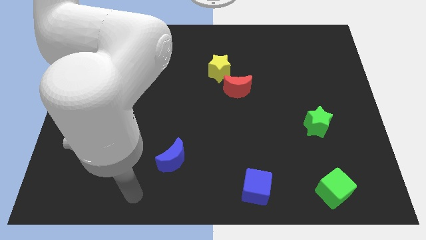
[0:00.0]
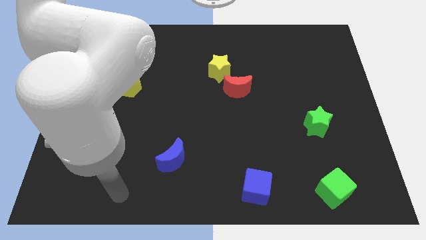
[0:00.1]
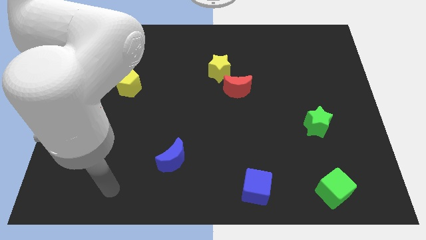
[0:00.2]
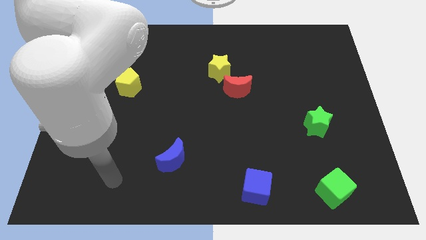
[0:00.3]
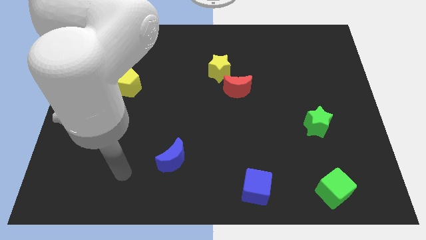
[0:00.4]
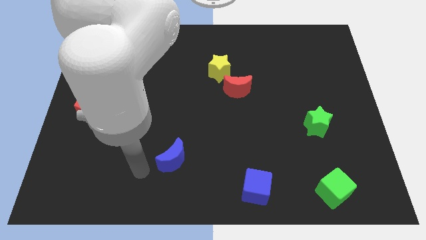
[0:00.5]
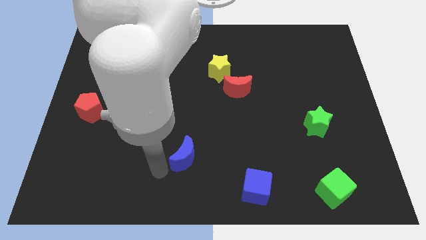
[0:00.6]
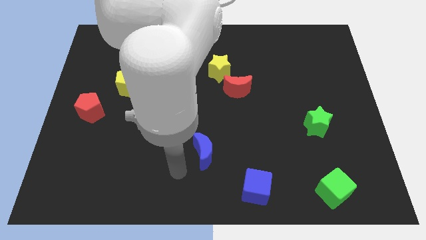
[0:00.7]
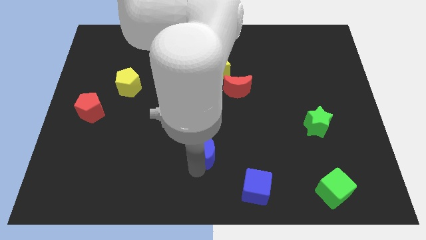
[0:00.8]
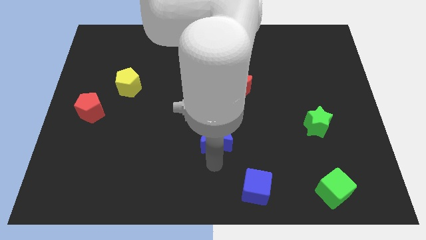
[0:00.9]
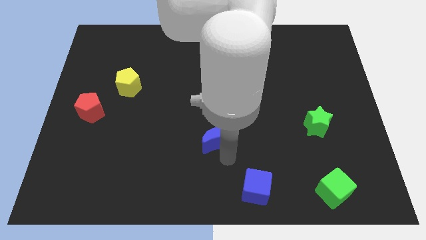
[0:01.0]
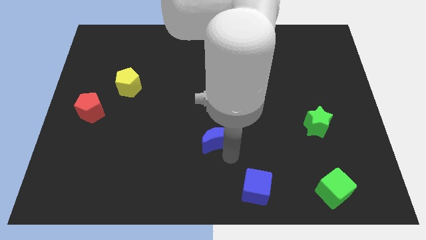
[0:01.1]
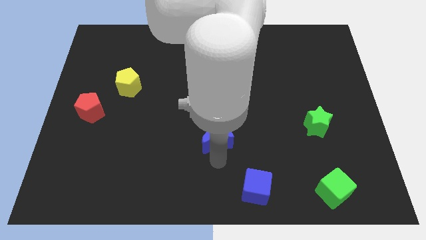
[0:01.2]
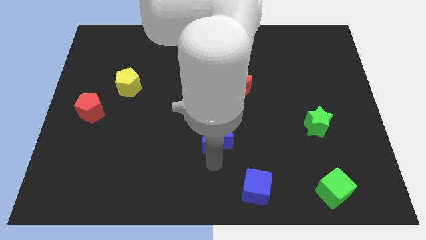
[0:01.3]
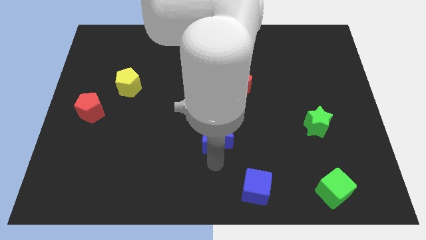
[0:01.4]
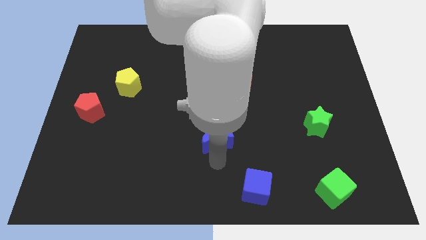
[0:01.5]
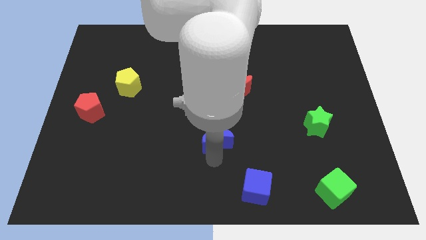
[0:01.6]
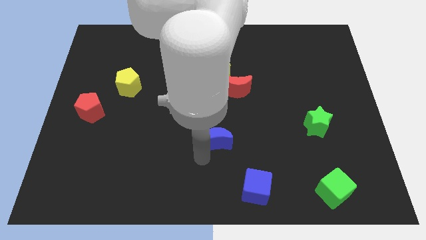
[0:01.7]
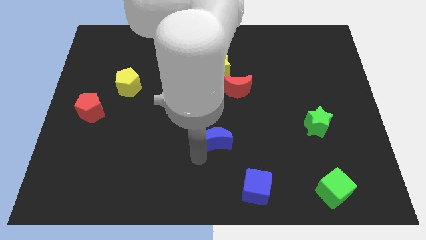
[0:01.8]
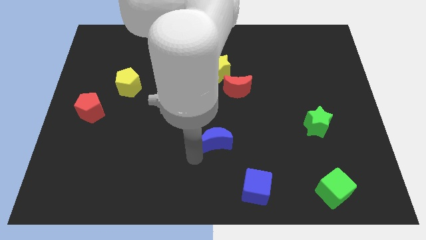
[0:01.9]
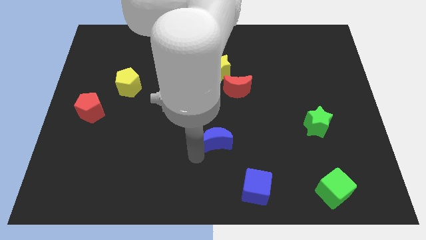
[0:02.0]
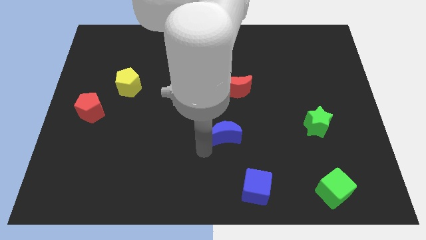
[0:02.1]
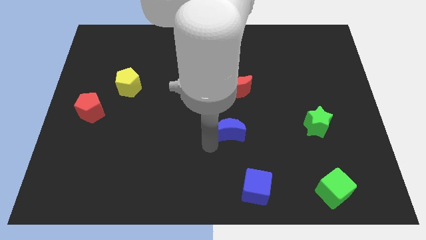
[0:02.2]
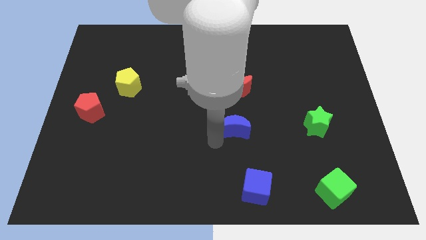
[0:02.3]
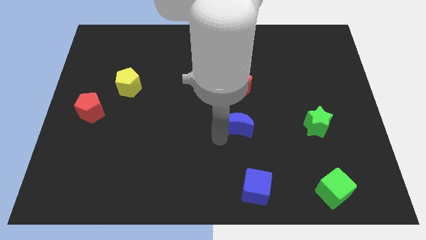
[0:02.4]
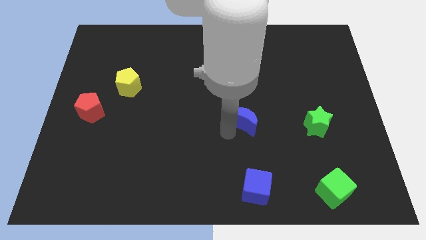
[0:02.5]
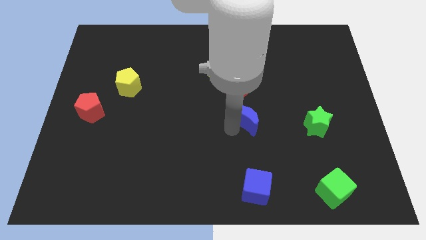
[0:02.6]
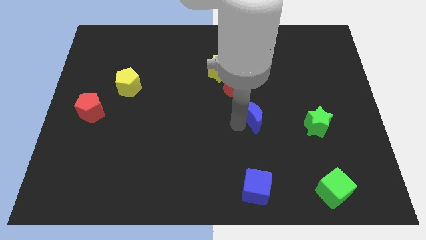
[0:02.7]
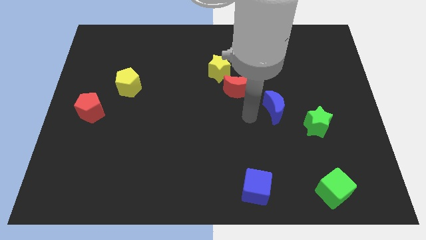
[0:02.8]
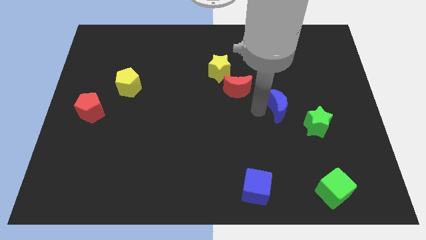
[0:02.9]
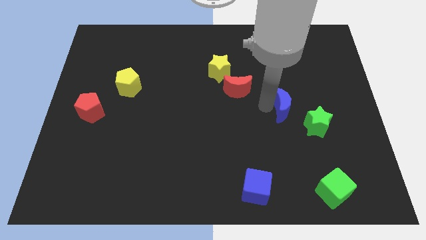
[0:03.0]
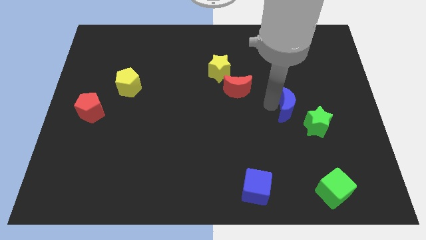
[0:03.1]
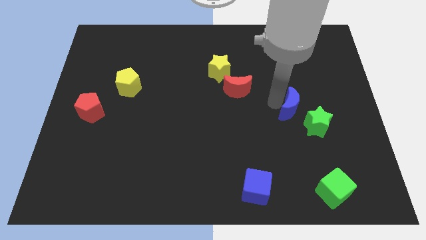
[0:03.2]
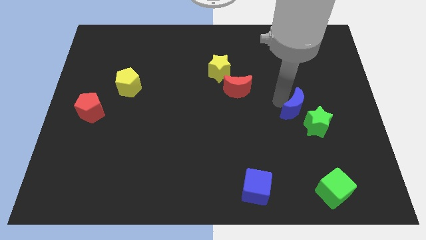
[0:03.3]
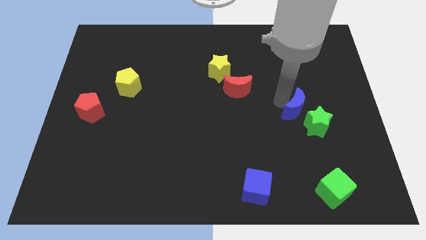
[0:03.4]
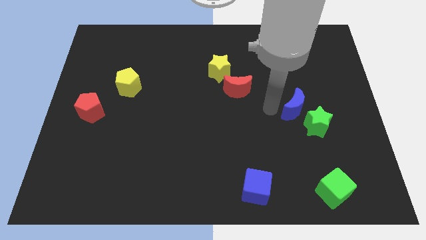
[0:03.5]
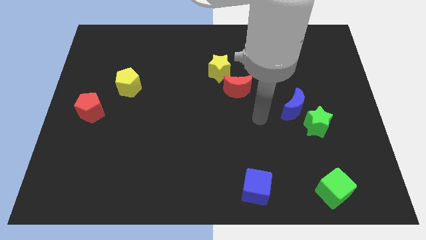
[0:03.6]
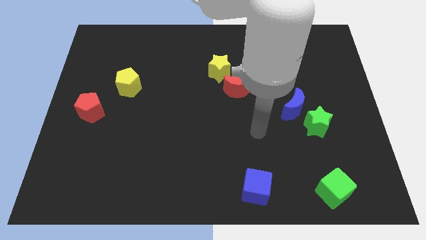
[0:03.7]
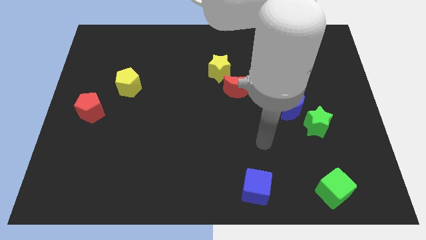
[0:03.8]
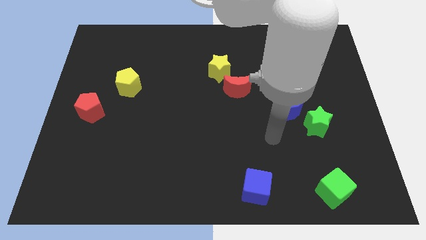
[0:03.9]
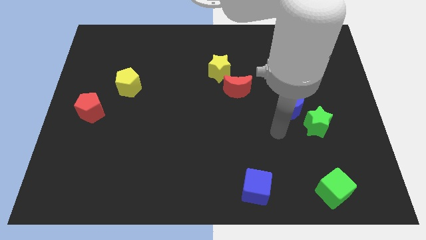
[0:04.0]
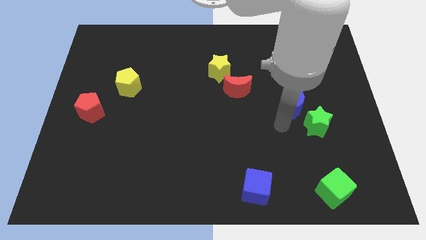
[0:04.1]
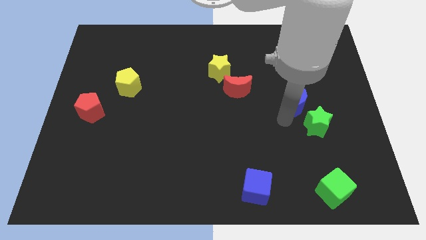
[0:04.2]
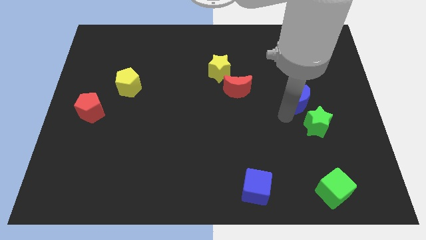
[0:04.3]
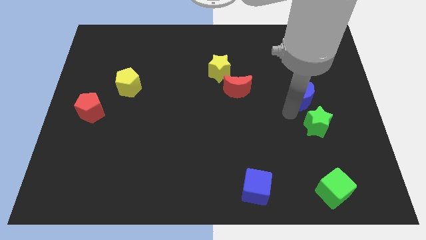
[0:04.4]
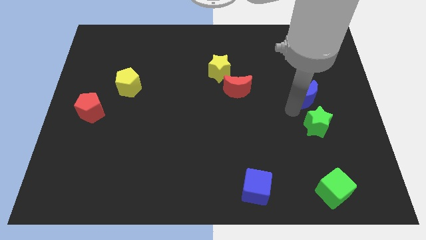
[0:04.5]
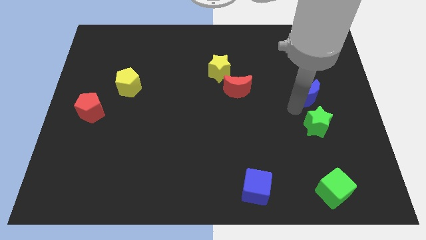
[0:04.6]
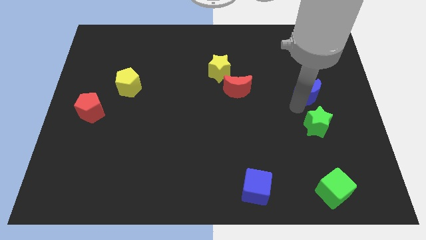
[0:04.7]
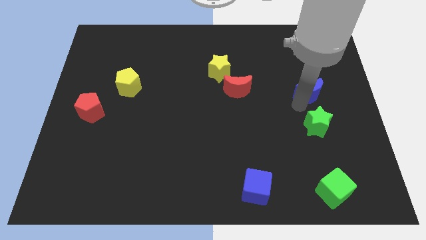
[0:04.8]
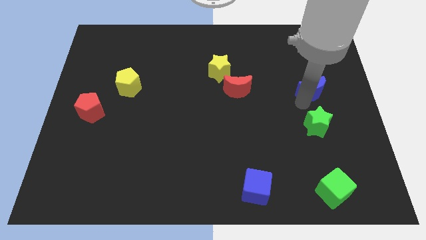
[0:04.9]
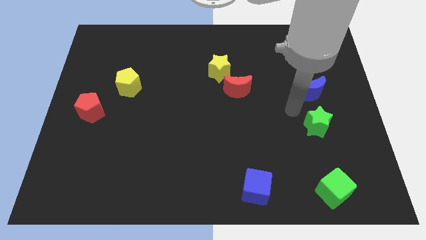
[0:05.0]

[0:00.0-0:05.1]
move the blue crescent to the top of the green star

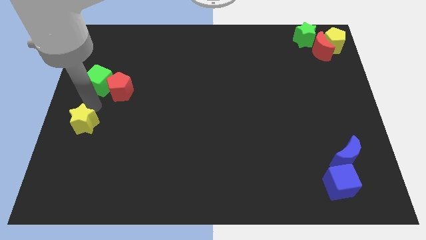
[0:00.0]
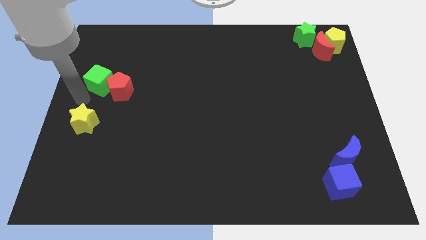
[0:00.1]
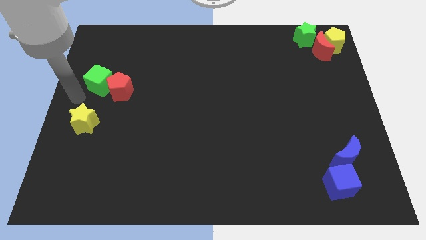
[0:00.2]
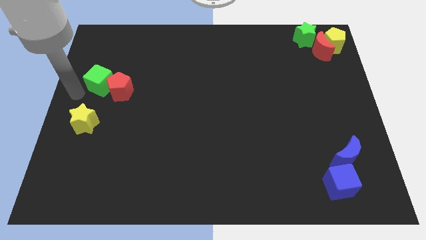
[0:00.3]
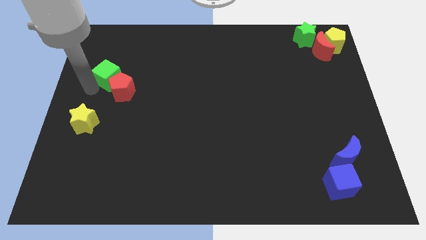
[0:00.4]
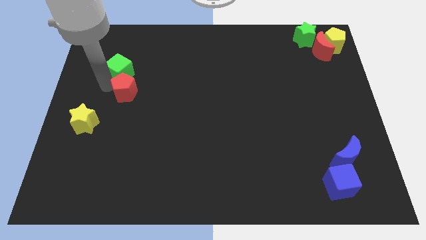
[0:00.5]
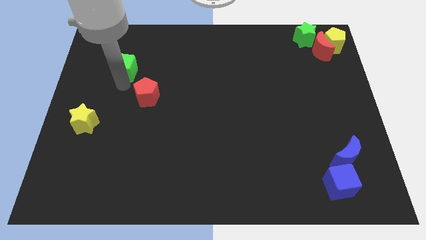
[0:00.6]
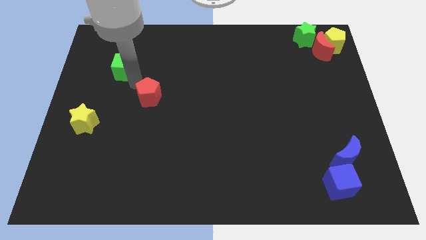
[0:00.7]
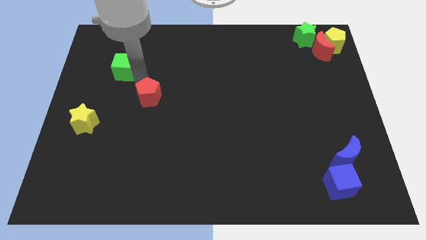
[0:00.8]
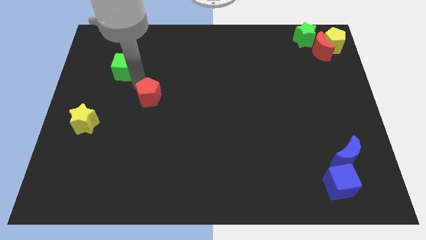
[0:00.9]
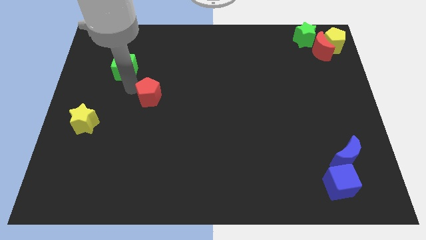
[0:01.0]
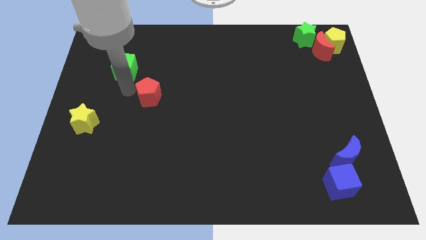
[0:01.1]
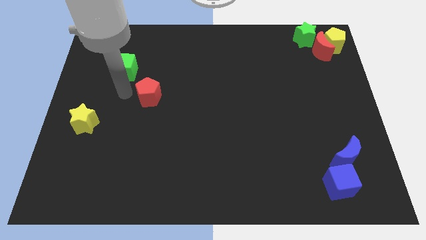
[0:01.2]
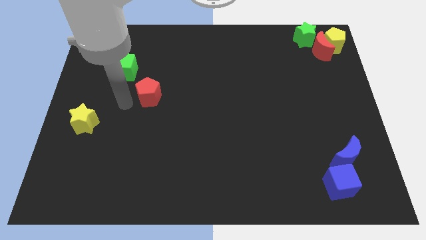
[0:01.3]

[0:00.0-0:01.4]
separate the green cube from red pentagon

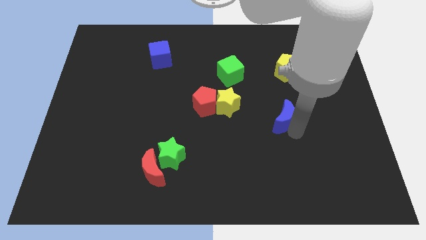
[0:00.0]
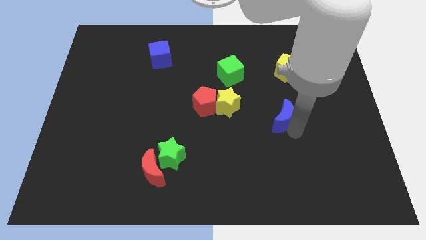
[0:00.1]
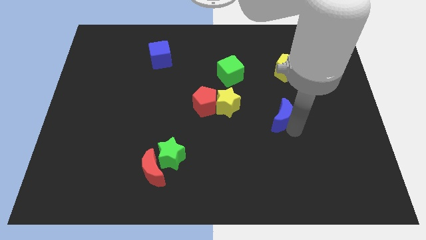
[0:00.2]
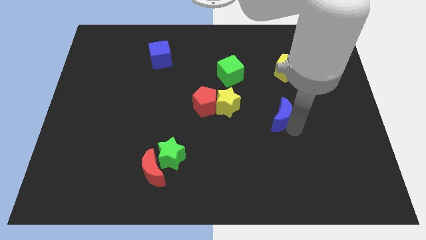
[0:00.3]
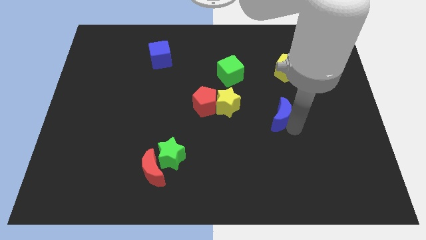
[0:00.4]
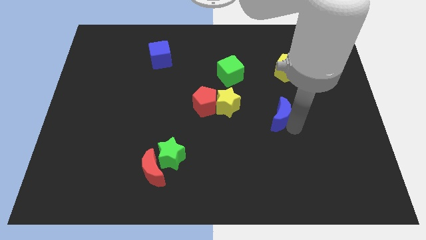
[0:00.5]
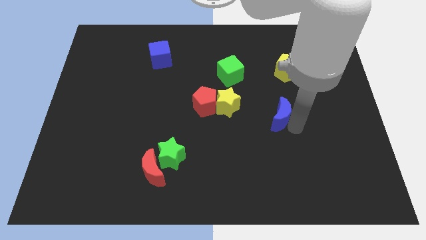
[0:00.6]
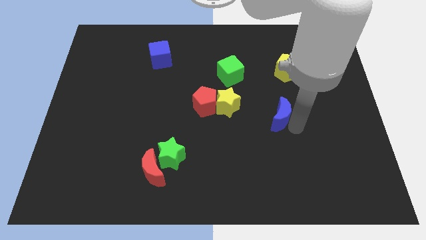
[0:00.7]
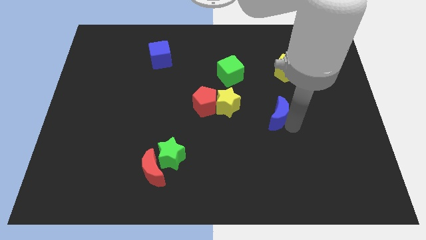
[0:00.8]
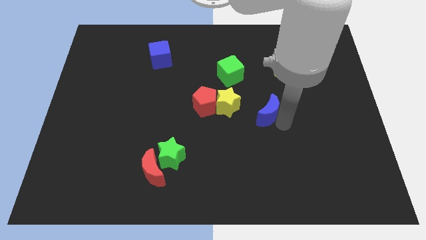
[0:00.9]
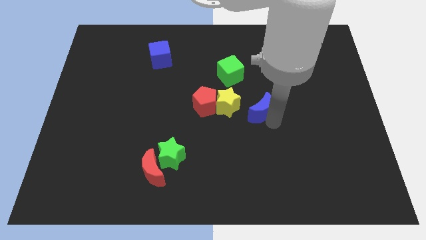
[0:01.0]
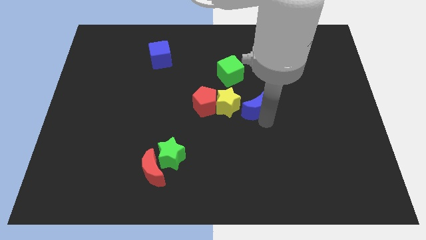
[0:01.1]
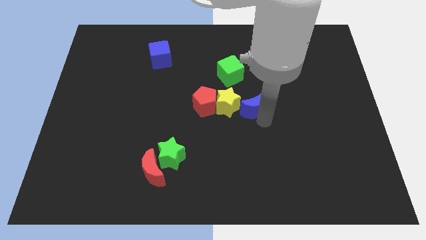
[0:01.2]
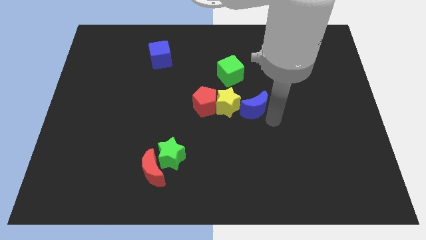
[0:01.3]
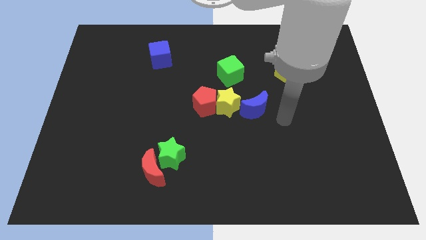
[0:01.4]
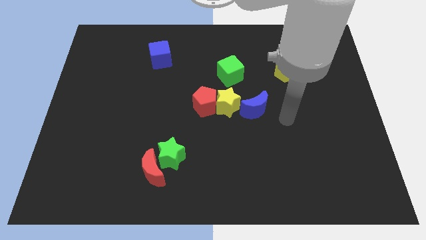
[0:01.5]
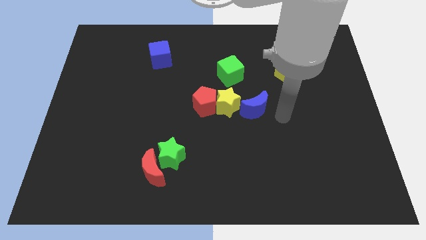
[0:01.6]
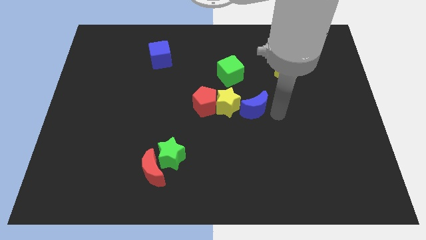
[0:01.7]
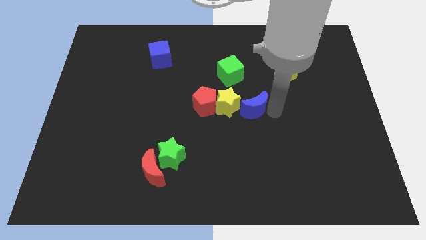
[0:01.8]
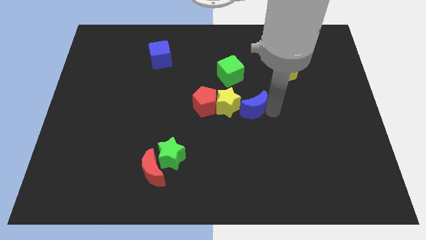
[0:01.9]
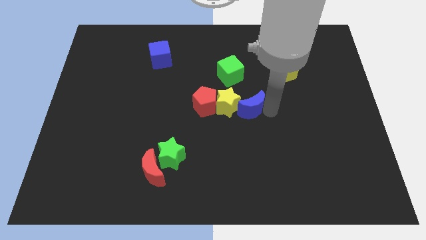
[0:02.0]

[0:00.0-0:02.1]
place blue crescent to the right of yellow star

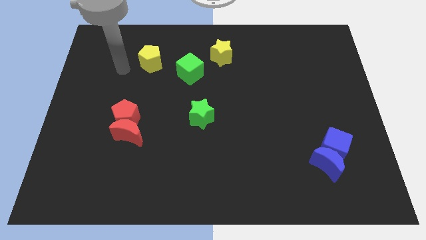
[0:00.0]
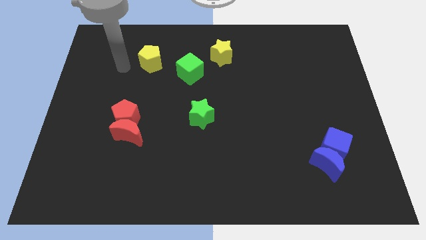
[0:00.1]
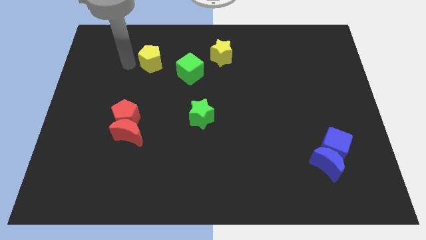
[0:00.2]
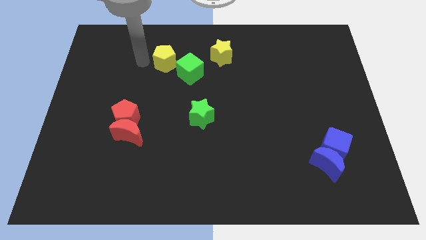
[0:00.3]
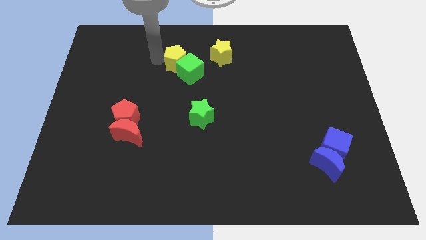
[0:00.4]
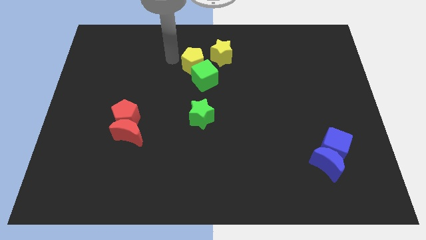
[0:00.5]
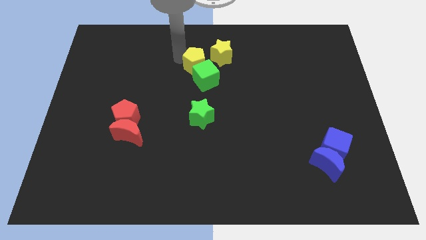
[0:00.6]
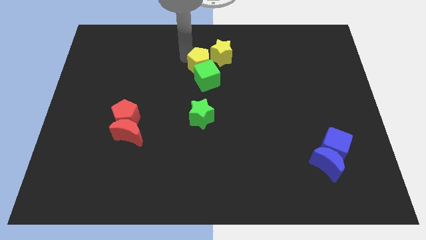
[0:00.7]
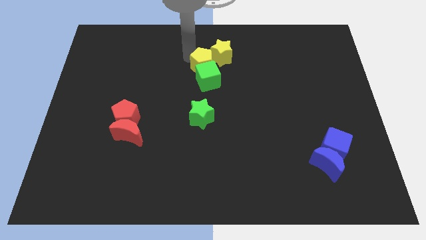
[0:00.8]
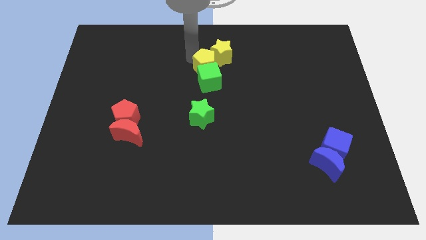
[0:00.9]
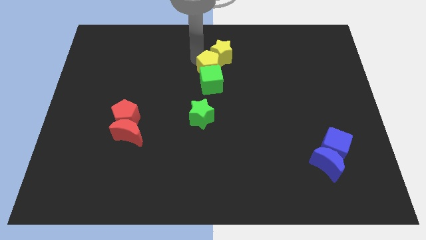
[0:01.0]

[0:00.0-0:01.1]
move the yellow pentagon into the green cube
